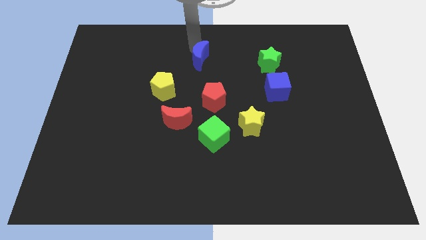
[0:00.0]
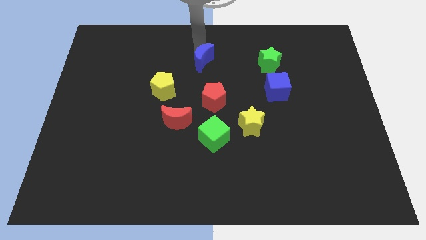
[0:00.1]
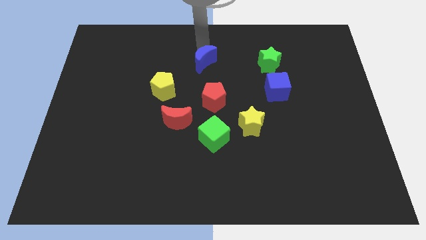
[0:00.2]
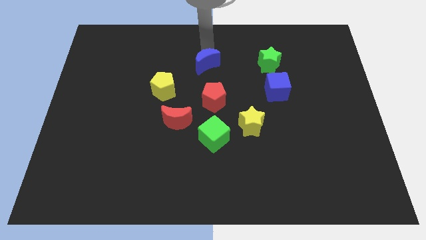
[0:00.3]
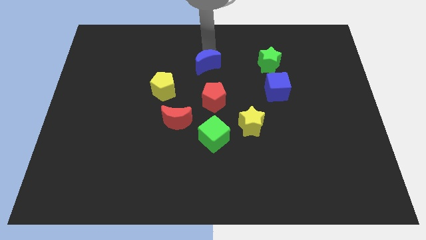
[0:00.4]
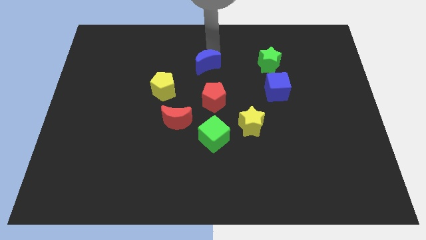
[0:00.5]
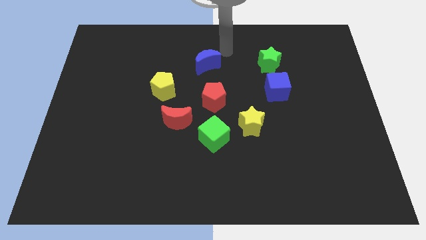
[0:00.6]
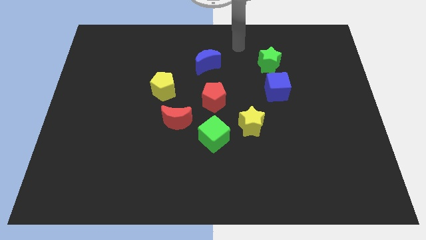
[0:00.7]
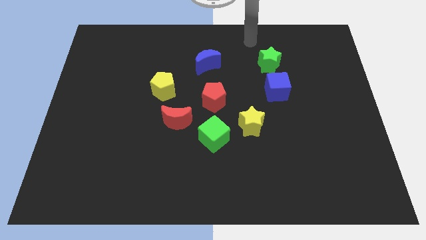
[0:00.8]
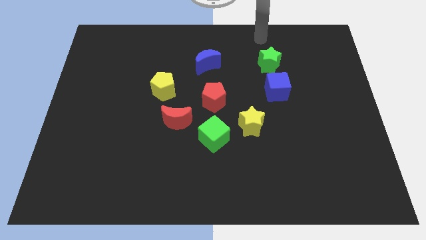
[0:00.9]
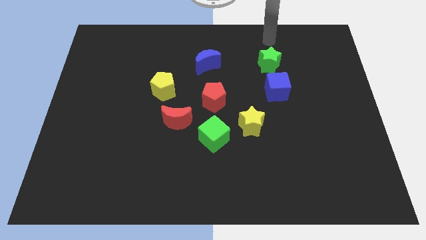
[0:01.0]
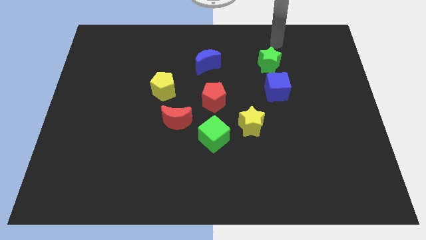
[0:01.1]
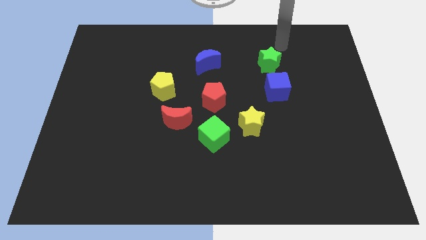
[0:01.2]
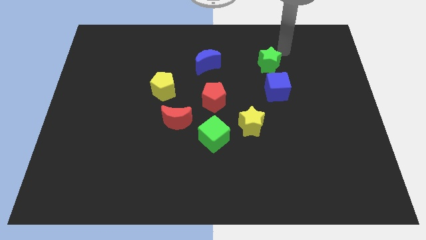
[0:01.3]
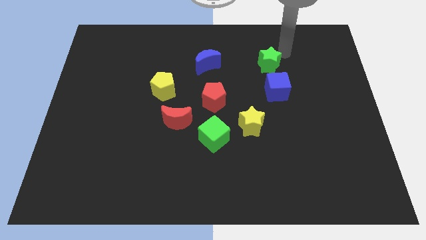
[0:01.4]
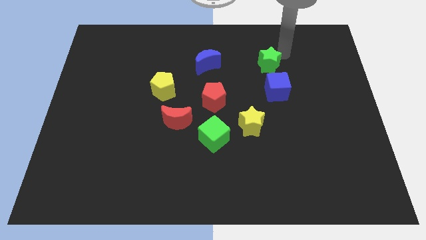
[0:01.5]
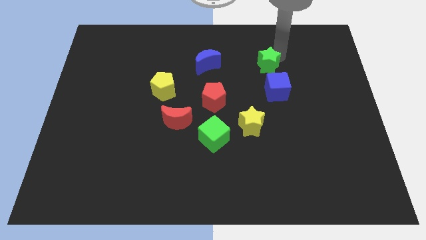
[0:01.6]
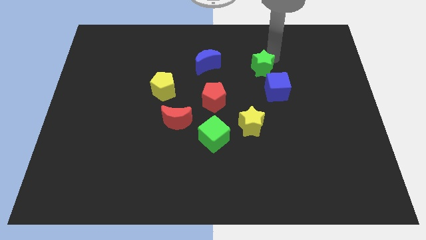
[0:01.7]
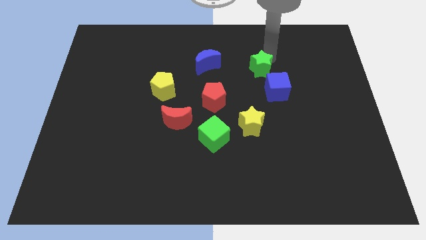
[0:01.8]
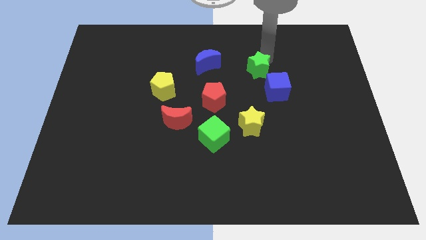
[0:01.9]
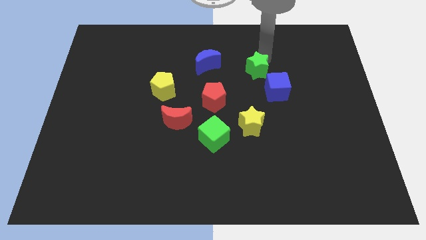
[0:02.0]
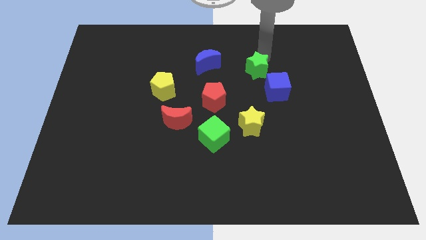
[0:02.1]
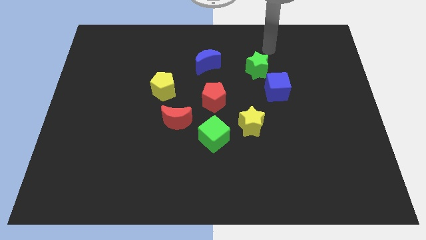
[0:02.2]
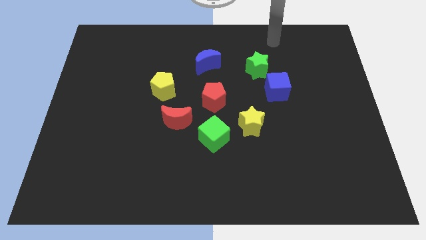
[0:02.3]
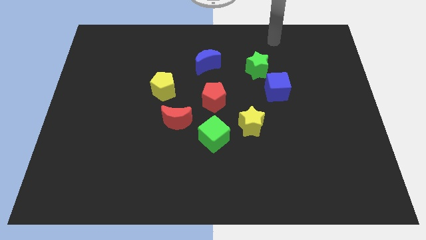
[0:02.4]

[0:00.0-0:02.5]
slightly tap the green star towards the top left of the blue cube

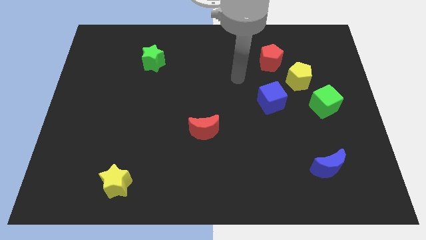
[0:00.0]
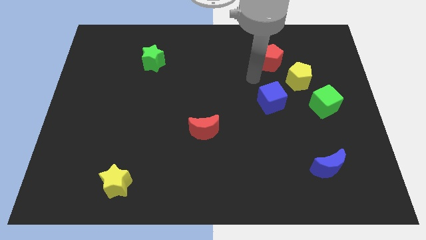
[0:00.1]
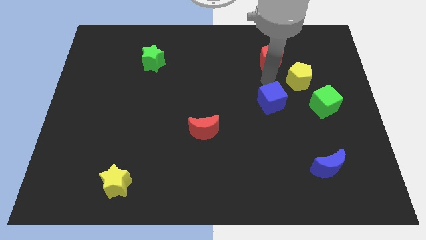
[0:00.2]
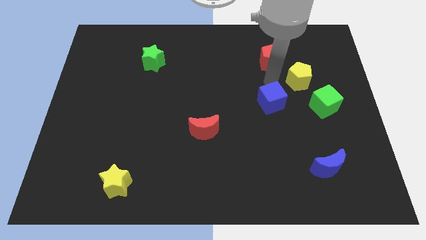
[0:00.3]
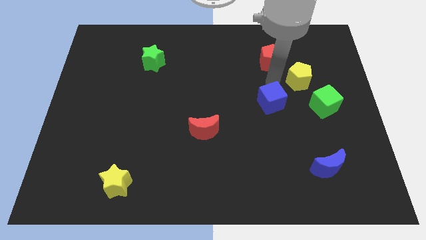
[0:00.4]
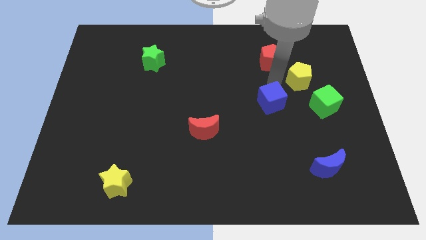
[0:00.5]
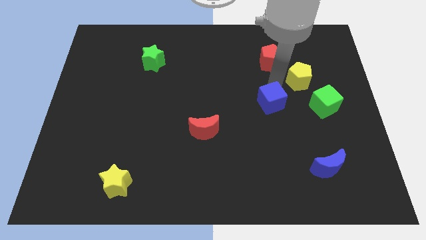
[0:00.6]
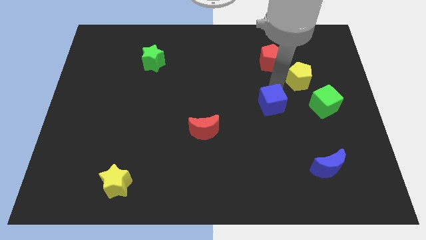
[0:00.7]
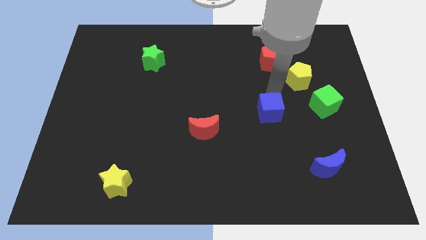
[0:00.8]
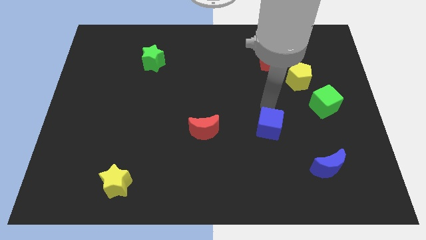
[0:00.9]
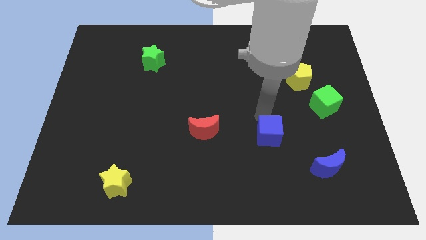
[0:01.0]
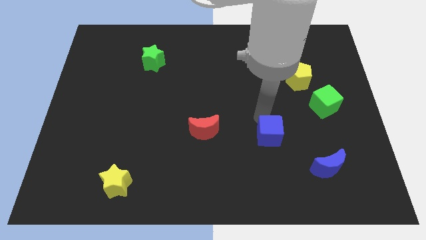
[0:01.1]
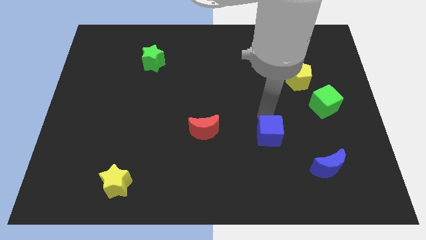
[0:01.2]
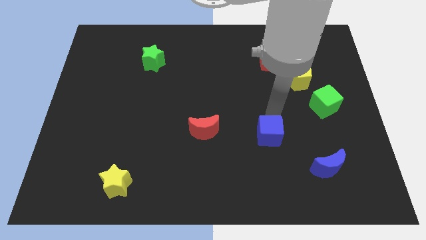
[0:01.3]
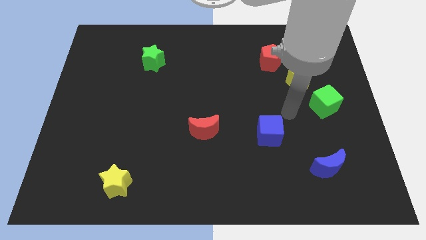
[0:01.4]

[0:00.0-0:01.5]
place the blue cube to the right of the red moon

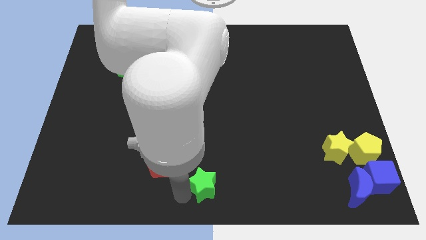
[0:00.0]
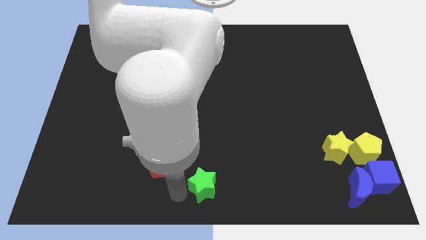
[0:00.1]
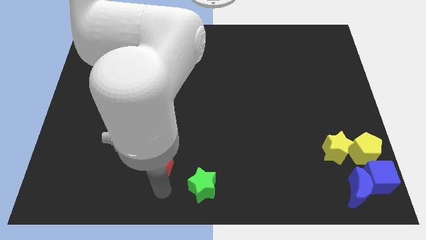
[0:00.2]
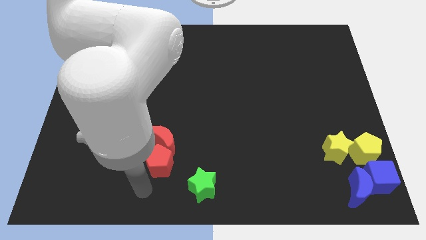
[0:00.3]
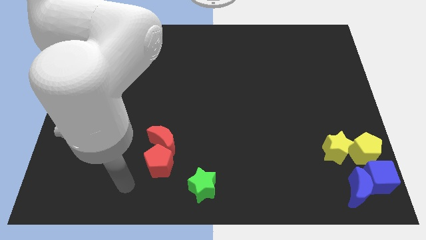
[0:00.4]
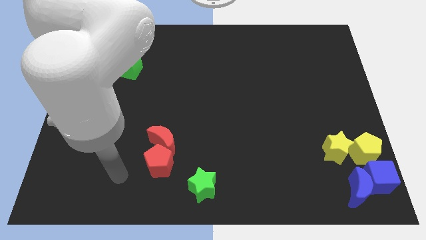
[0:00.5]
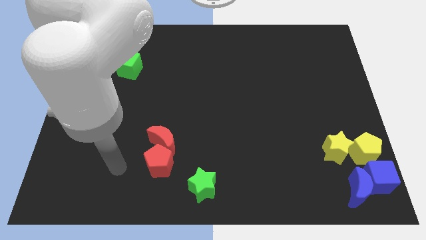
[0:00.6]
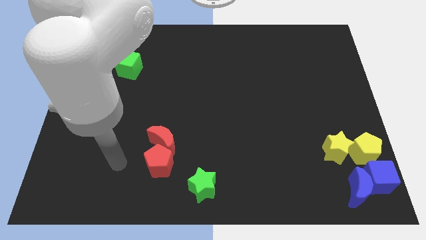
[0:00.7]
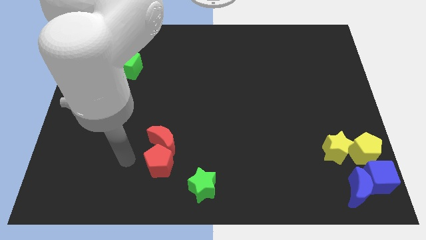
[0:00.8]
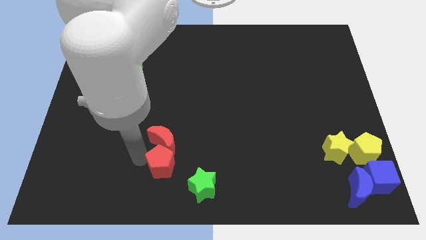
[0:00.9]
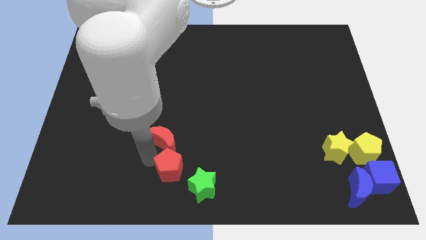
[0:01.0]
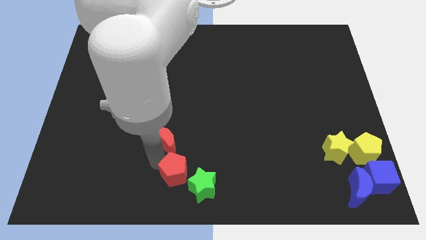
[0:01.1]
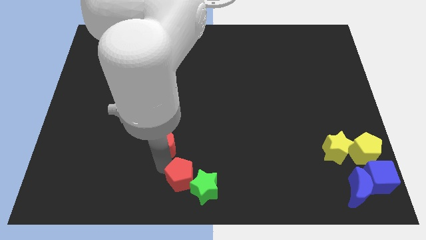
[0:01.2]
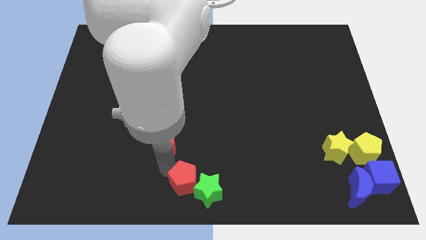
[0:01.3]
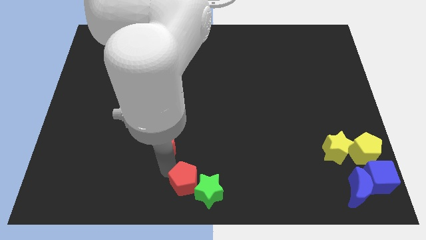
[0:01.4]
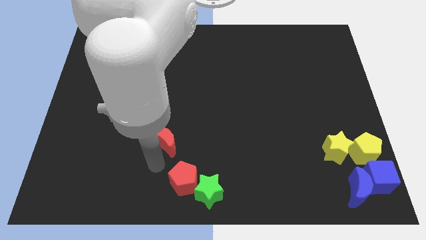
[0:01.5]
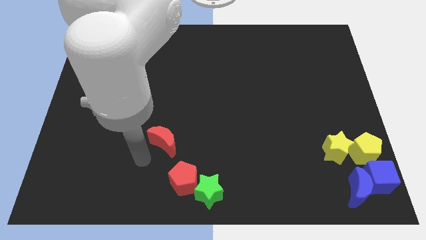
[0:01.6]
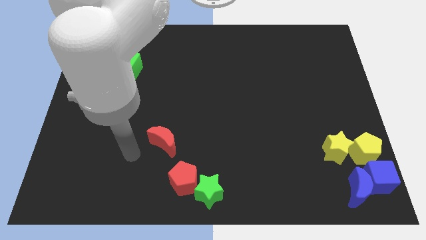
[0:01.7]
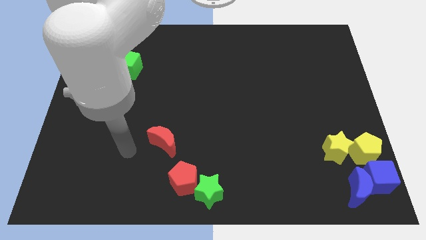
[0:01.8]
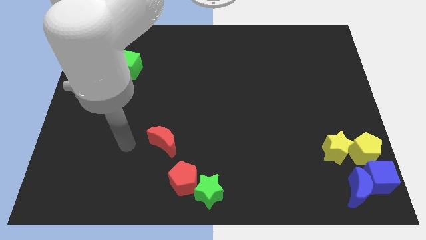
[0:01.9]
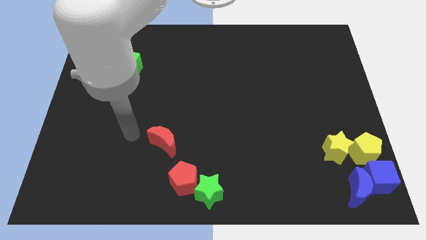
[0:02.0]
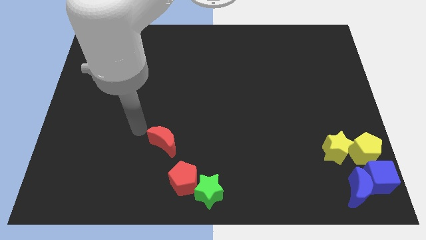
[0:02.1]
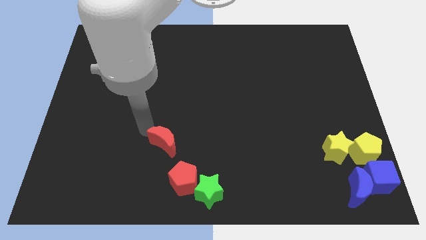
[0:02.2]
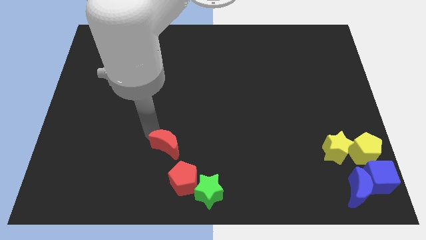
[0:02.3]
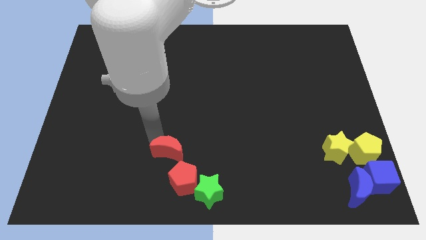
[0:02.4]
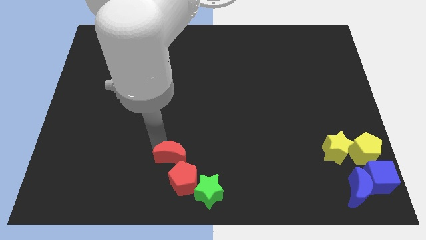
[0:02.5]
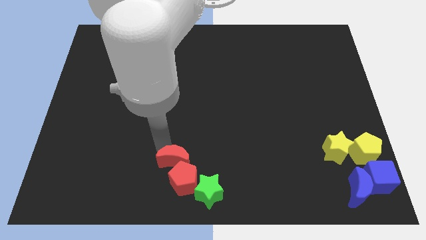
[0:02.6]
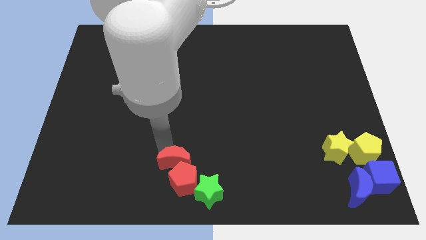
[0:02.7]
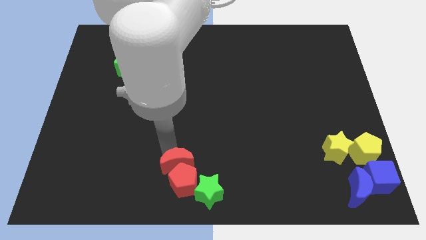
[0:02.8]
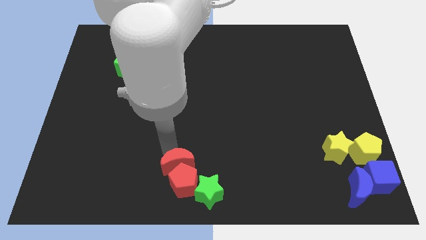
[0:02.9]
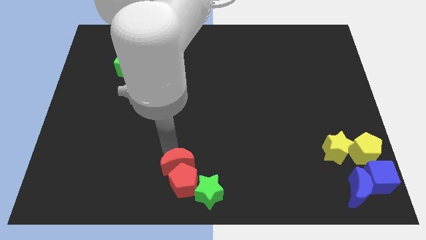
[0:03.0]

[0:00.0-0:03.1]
push the red moon and the red pentagon to the bottom center of the board

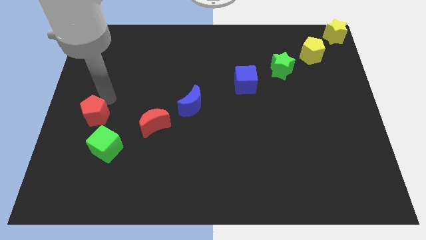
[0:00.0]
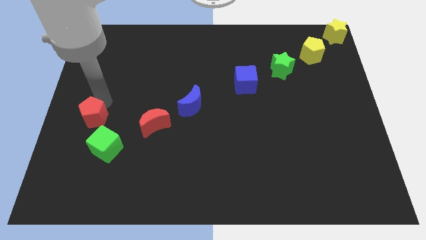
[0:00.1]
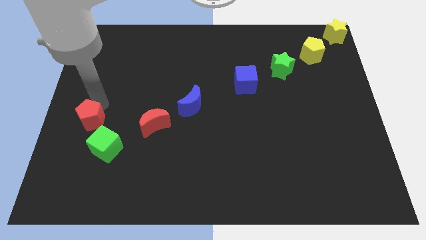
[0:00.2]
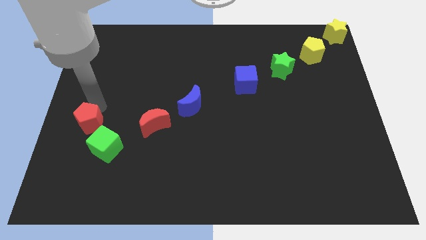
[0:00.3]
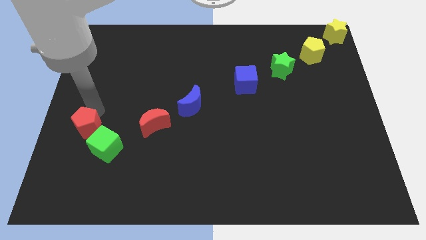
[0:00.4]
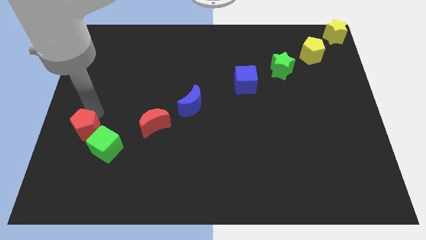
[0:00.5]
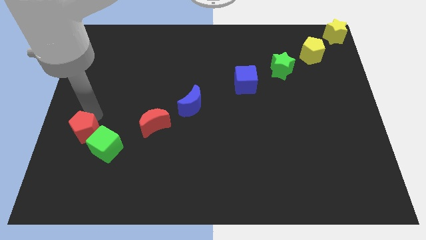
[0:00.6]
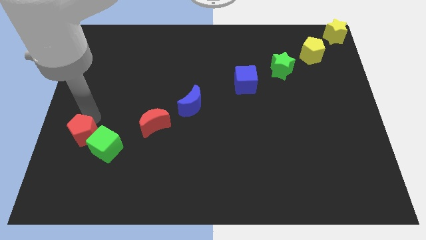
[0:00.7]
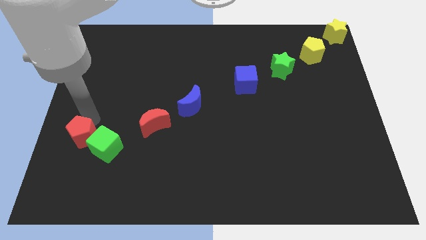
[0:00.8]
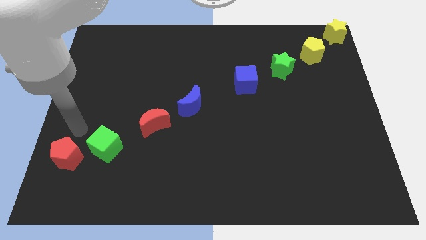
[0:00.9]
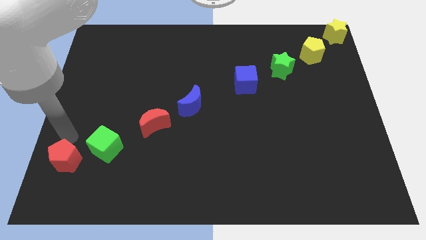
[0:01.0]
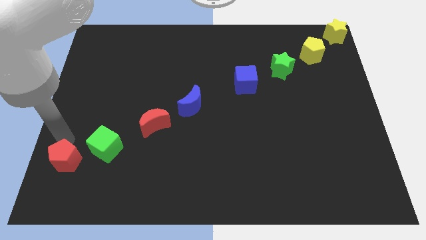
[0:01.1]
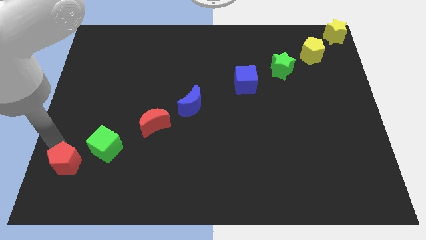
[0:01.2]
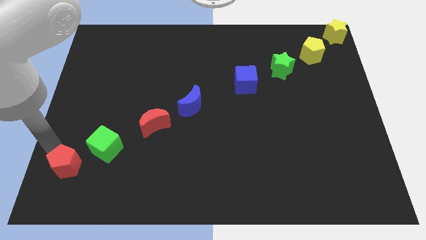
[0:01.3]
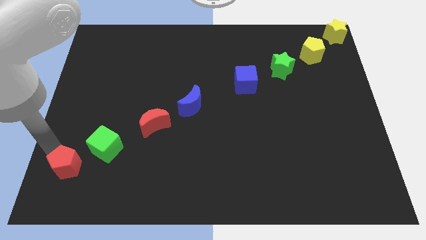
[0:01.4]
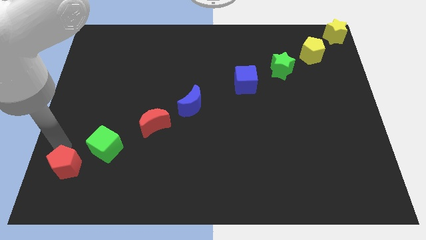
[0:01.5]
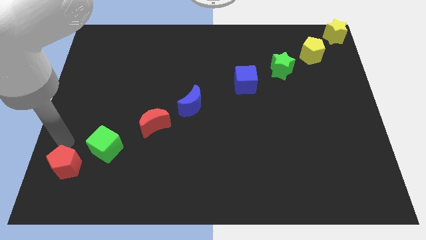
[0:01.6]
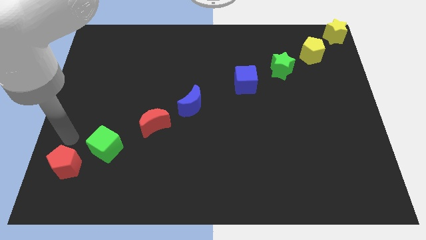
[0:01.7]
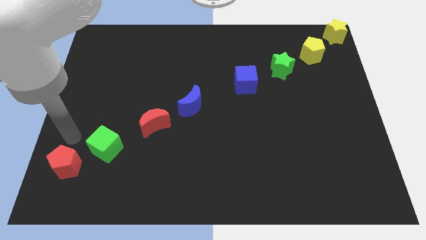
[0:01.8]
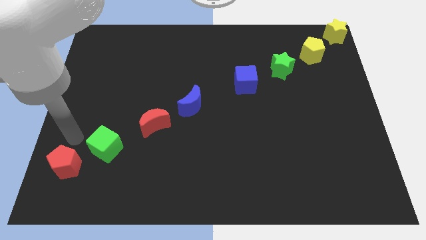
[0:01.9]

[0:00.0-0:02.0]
push the red pentagon towards the bottom left
